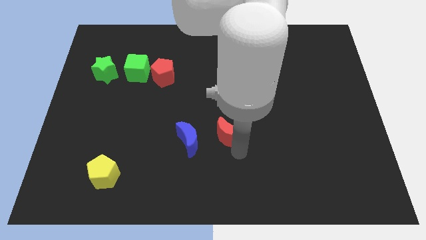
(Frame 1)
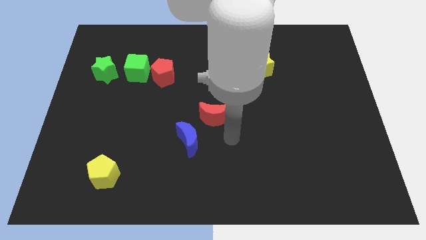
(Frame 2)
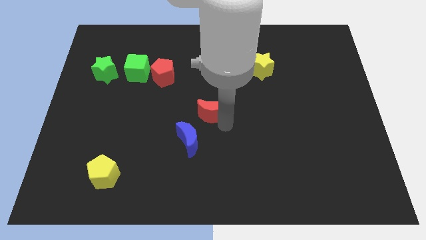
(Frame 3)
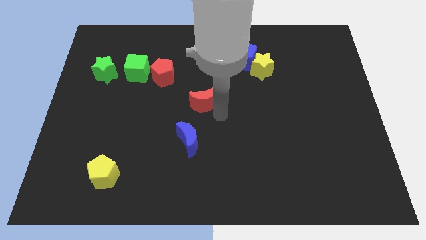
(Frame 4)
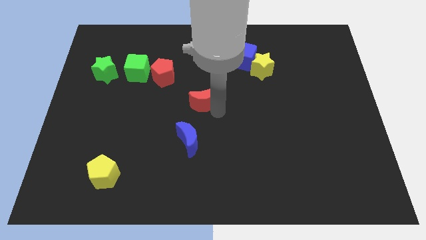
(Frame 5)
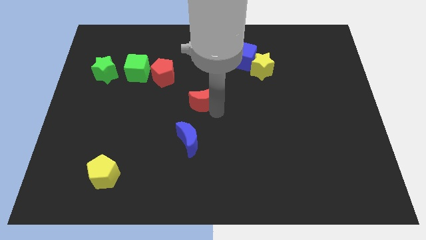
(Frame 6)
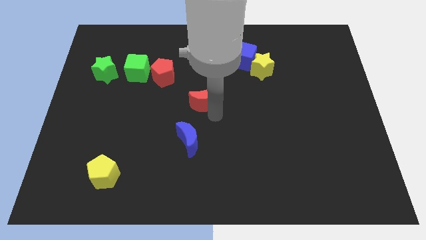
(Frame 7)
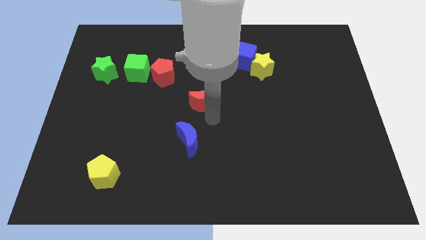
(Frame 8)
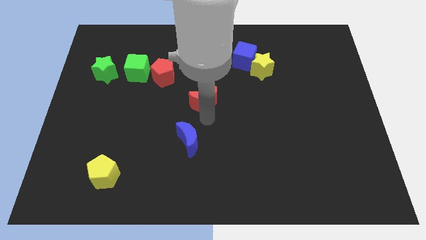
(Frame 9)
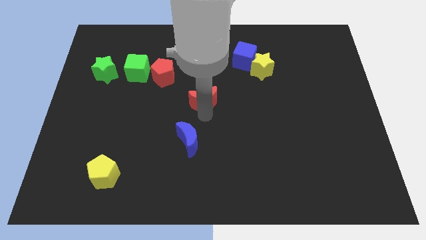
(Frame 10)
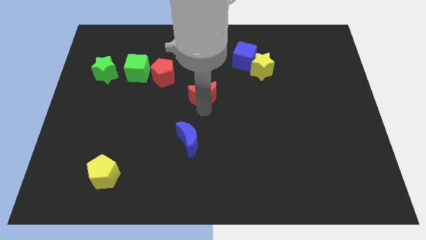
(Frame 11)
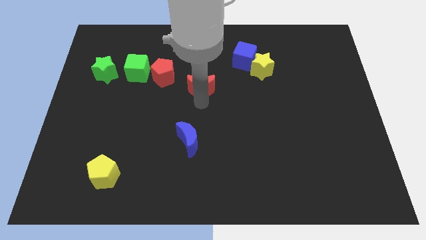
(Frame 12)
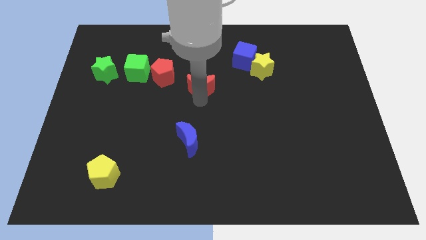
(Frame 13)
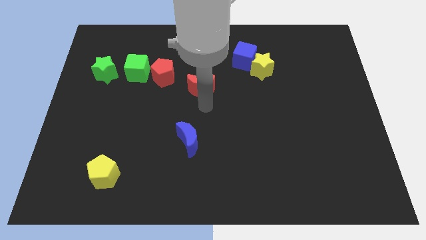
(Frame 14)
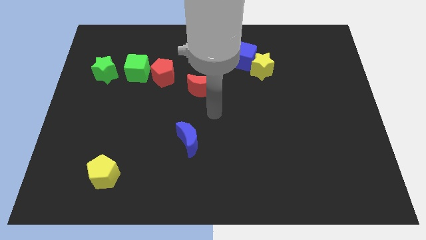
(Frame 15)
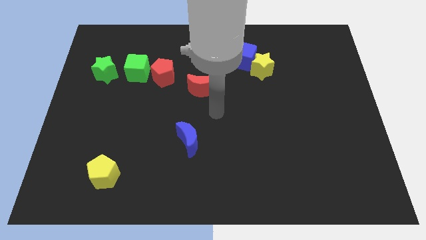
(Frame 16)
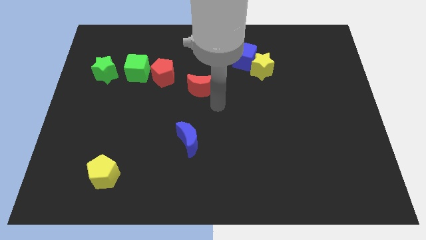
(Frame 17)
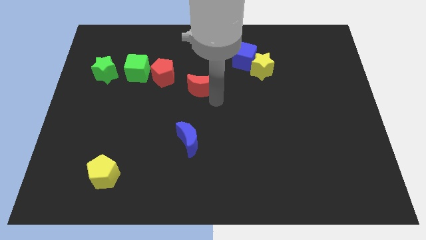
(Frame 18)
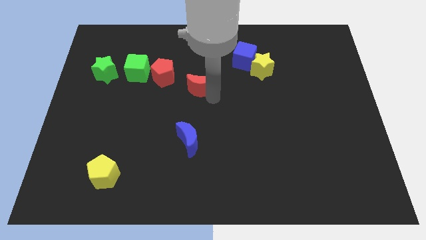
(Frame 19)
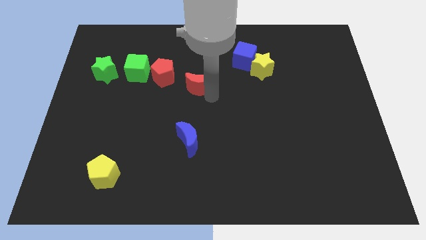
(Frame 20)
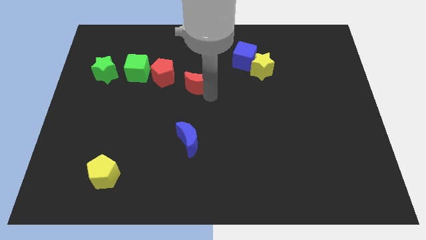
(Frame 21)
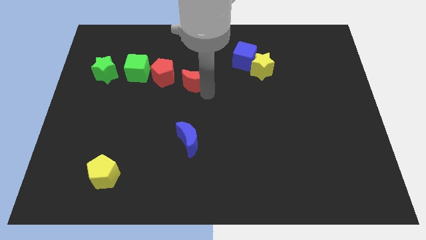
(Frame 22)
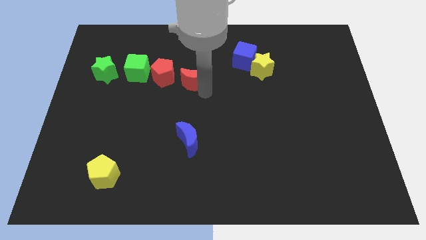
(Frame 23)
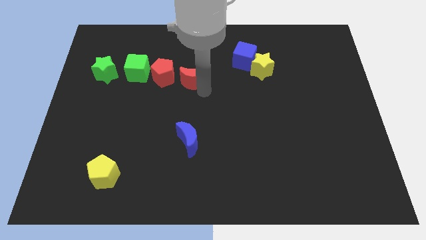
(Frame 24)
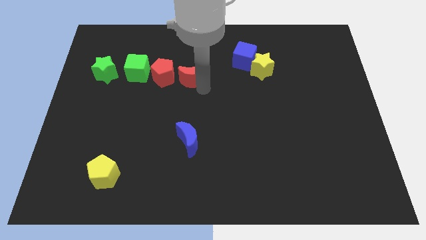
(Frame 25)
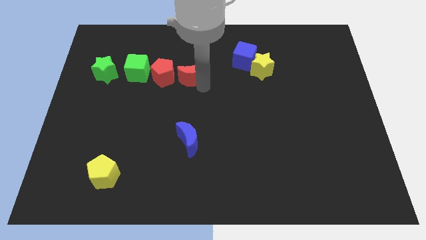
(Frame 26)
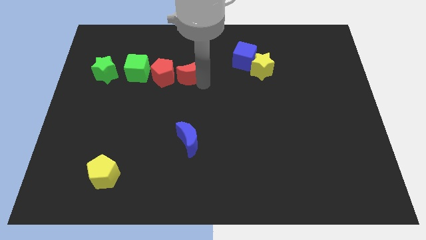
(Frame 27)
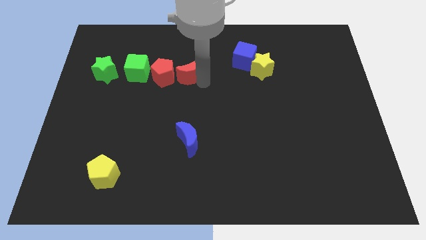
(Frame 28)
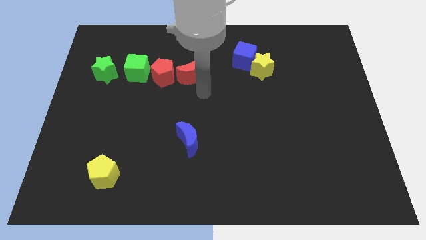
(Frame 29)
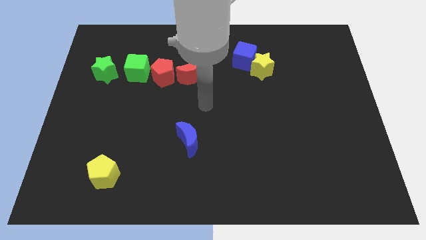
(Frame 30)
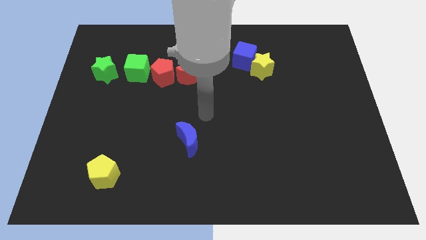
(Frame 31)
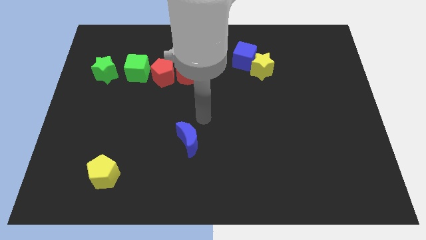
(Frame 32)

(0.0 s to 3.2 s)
put the red moon to the right side of the red pentagon

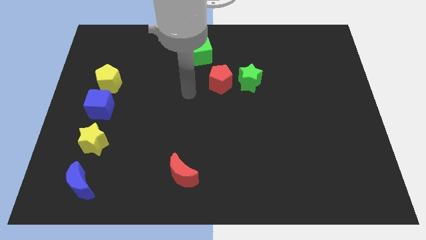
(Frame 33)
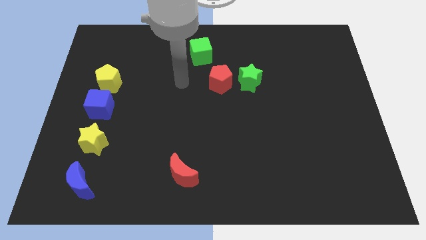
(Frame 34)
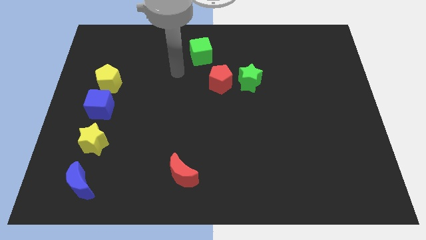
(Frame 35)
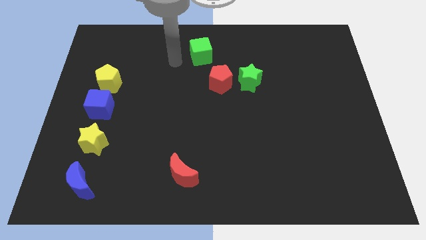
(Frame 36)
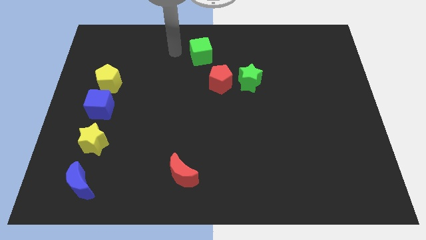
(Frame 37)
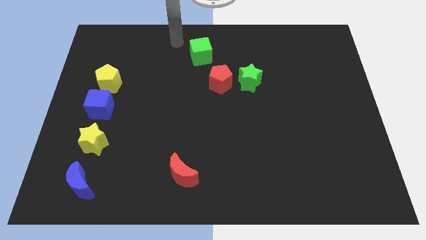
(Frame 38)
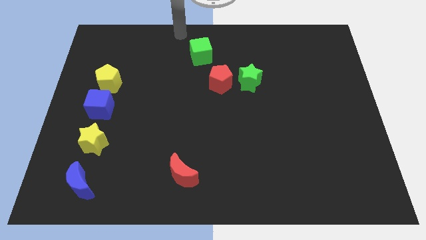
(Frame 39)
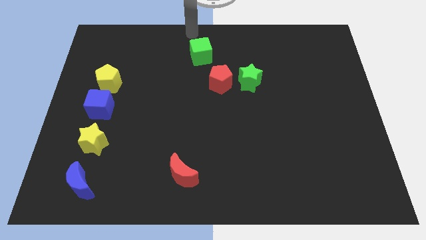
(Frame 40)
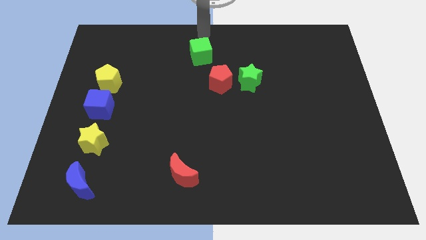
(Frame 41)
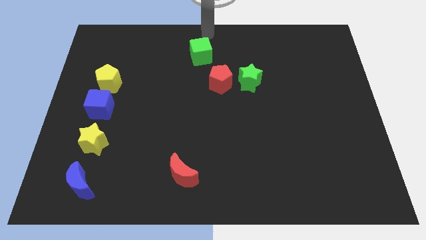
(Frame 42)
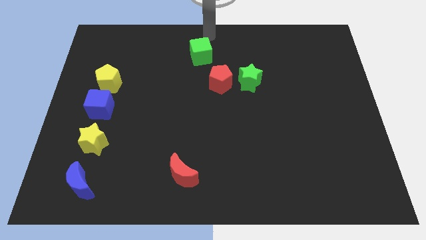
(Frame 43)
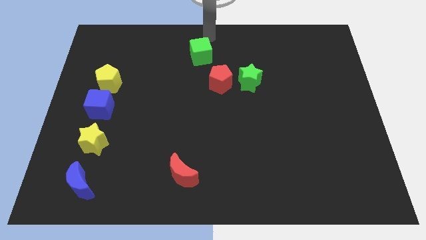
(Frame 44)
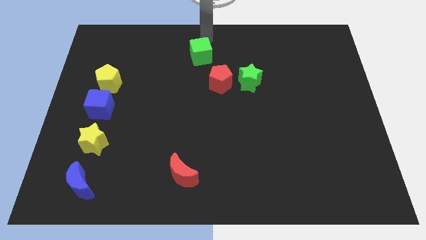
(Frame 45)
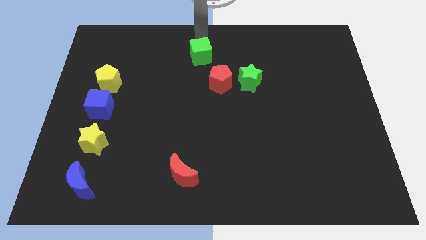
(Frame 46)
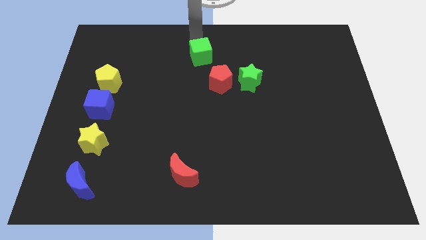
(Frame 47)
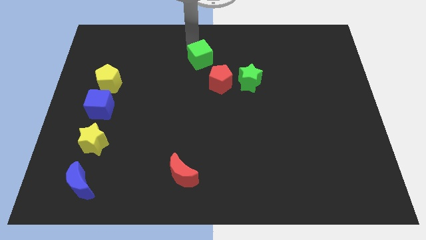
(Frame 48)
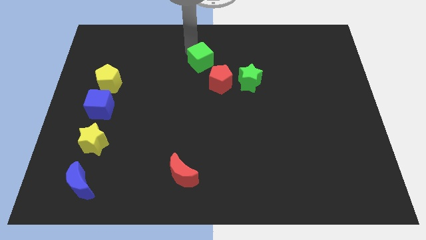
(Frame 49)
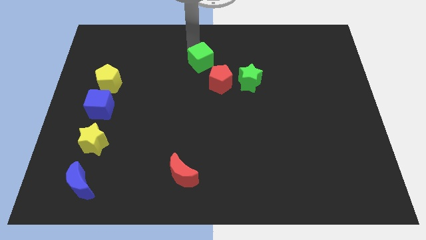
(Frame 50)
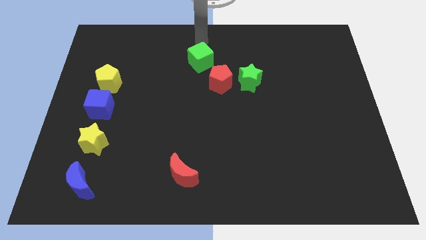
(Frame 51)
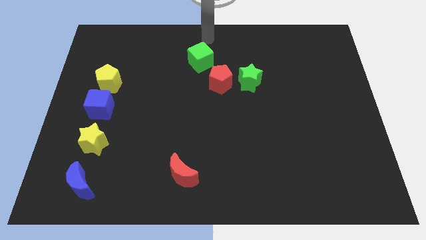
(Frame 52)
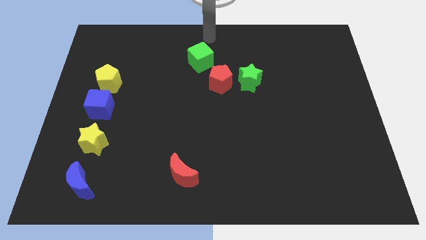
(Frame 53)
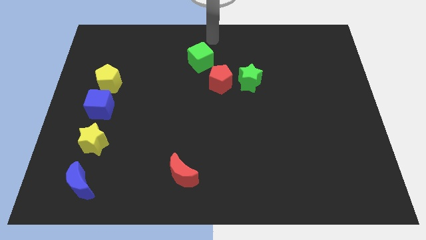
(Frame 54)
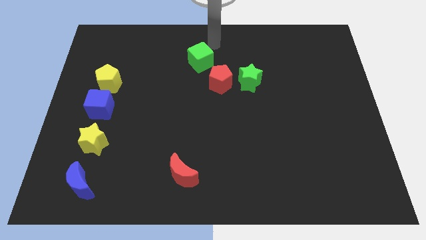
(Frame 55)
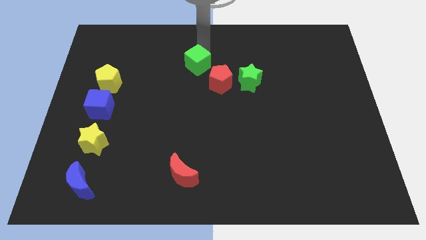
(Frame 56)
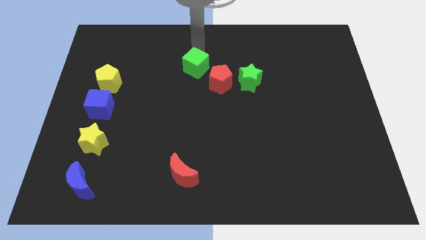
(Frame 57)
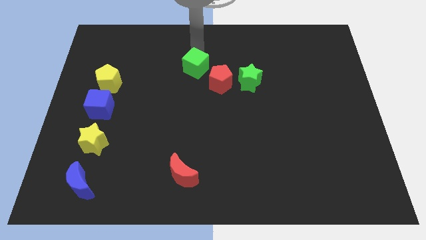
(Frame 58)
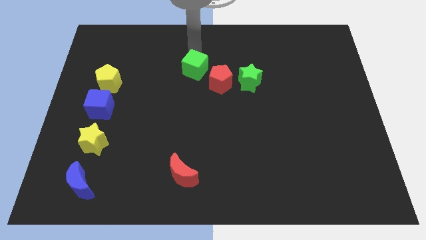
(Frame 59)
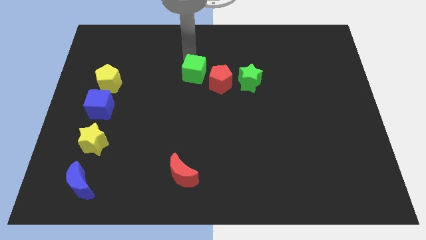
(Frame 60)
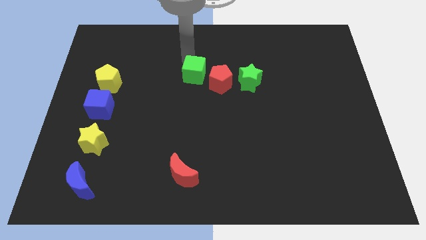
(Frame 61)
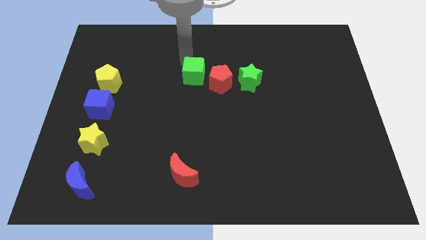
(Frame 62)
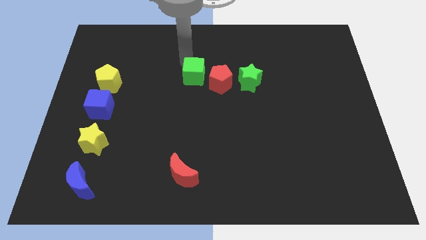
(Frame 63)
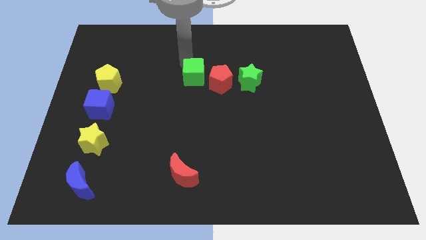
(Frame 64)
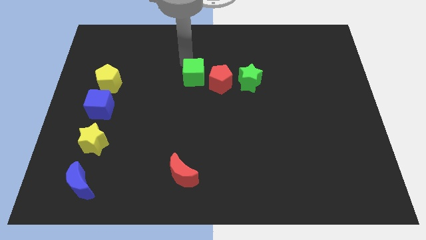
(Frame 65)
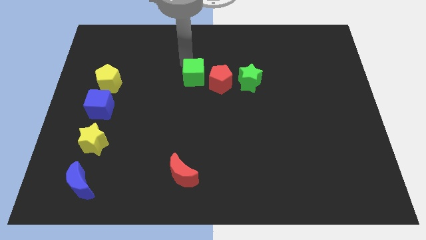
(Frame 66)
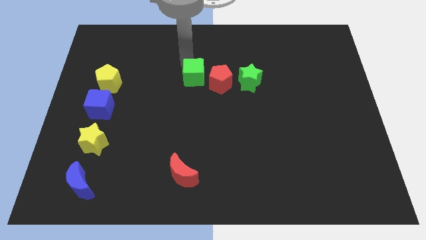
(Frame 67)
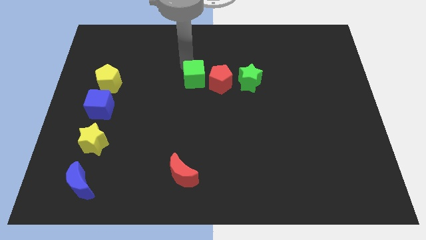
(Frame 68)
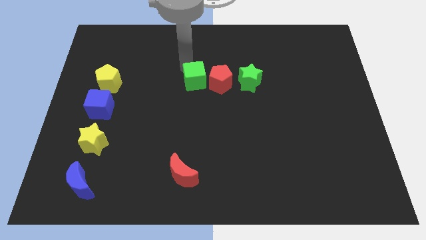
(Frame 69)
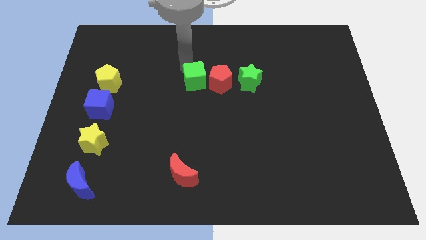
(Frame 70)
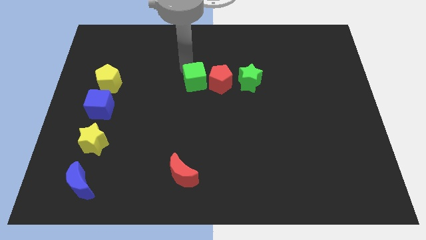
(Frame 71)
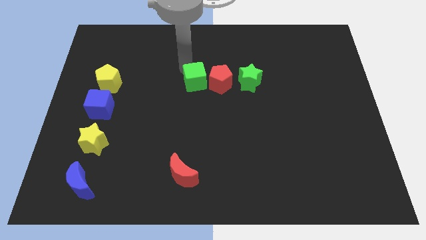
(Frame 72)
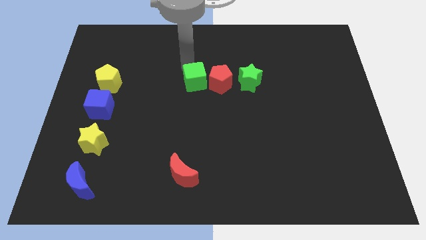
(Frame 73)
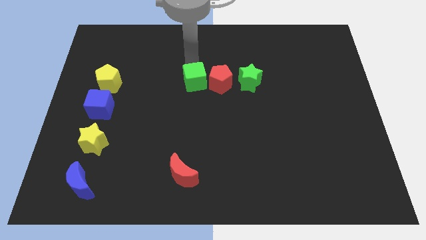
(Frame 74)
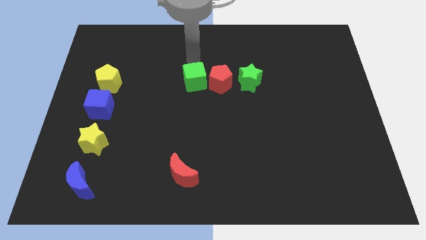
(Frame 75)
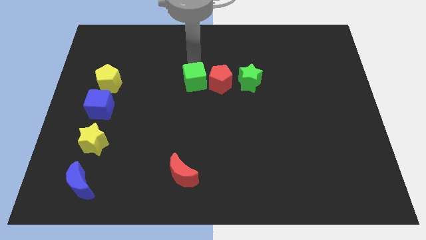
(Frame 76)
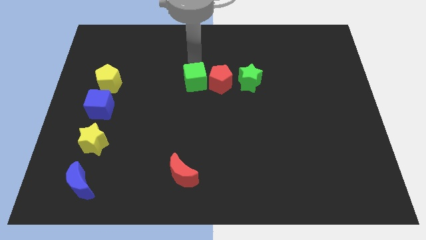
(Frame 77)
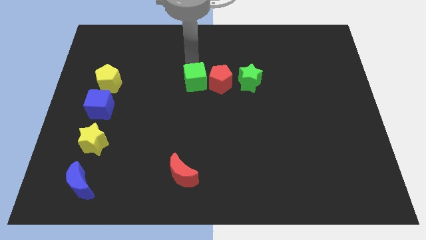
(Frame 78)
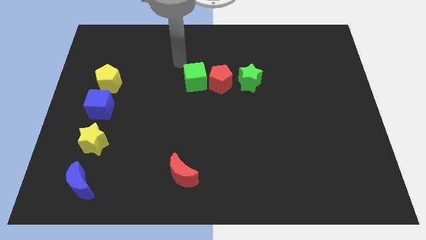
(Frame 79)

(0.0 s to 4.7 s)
drag the green cube to the left side of the red pentagon

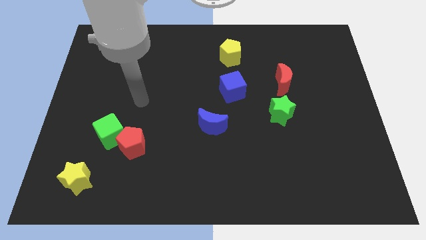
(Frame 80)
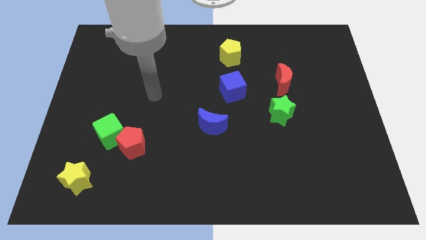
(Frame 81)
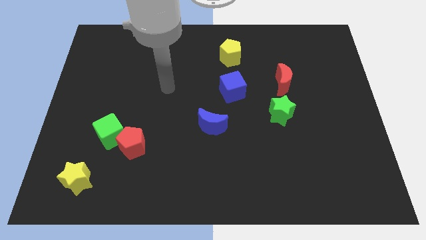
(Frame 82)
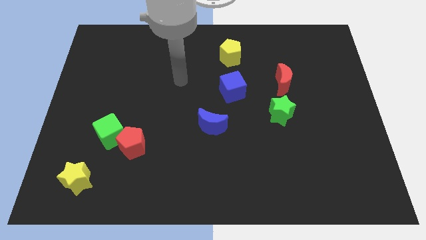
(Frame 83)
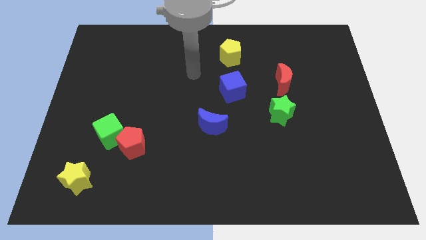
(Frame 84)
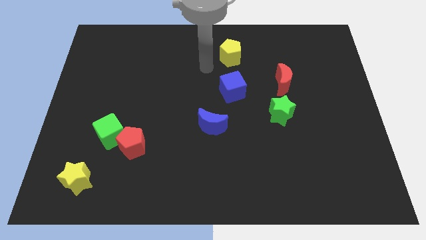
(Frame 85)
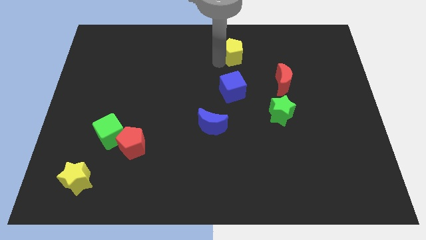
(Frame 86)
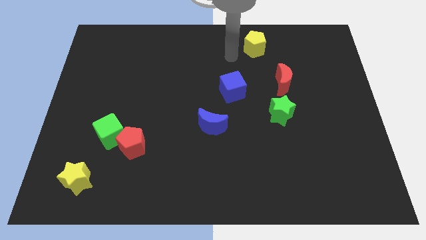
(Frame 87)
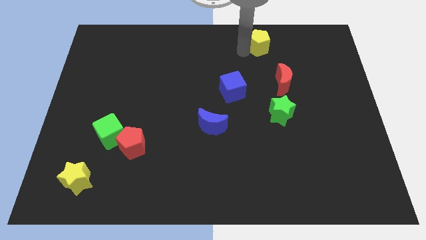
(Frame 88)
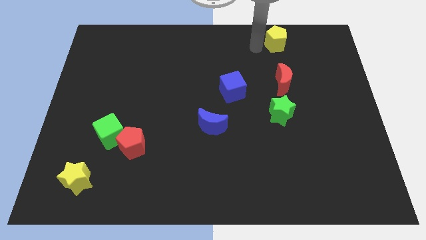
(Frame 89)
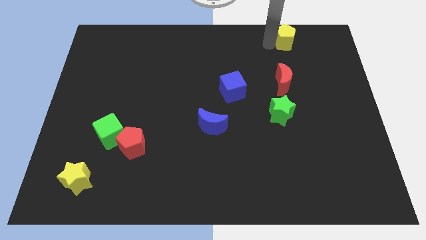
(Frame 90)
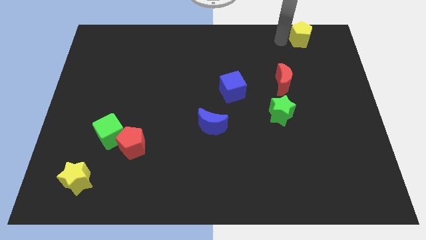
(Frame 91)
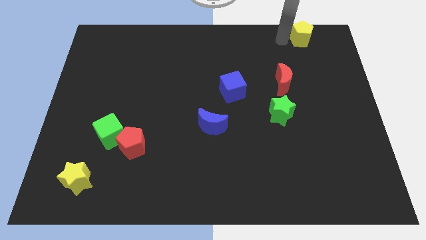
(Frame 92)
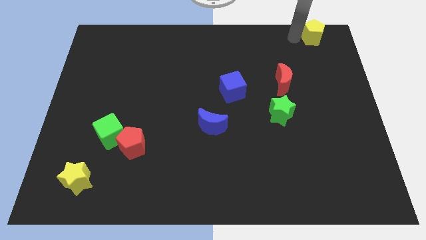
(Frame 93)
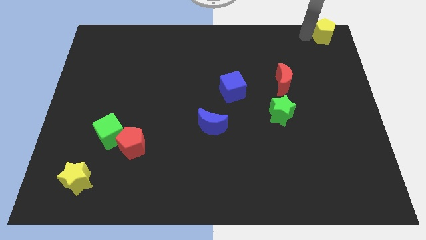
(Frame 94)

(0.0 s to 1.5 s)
put the yellow pentagon diagonally top right to the red moon
